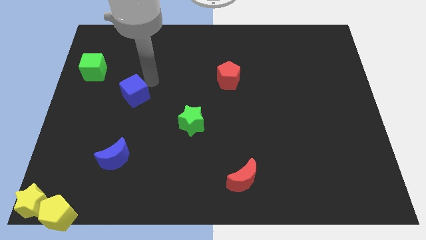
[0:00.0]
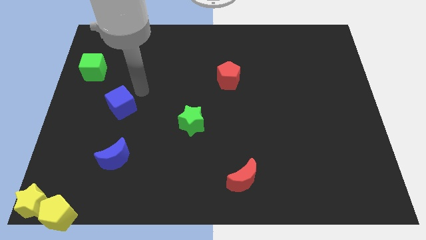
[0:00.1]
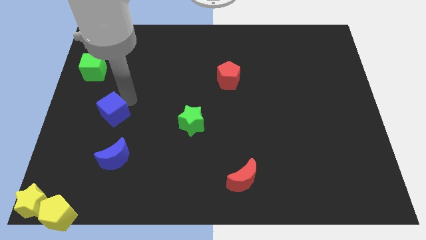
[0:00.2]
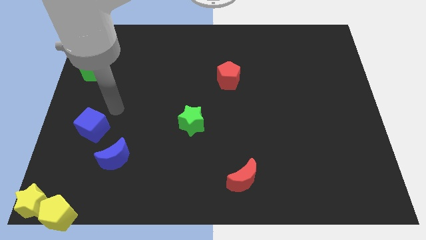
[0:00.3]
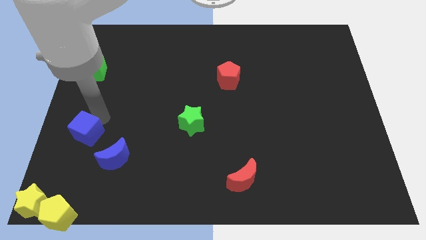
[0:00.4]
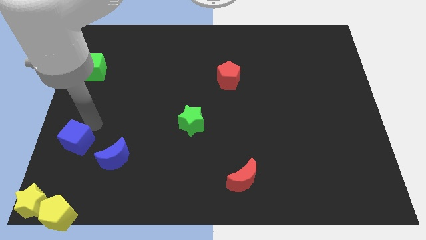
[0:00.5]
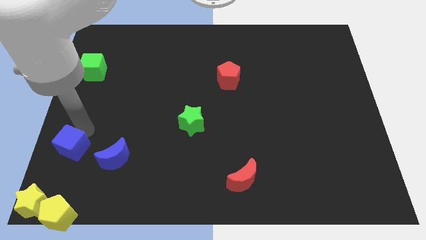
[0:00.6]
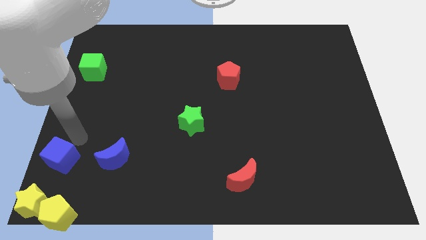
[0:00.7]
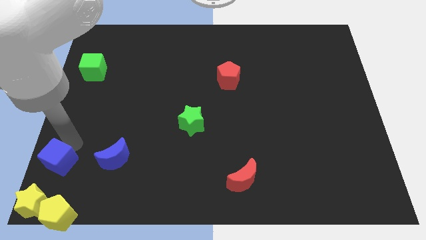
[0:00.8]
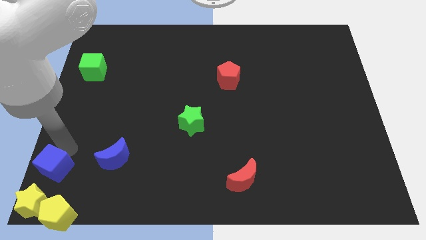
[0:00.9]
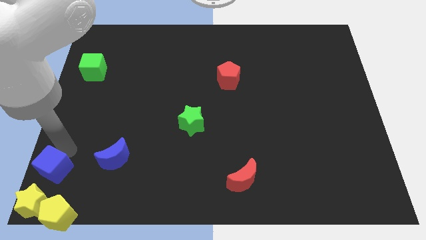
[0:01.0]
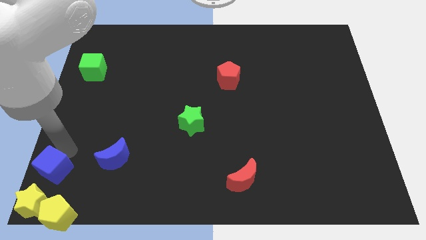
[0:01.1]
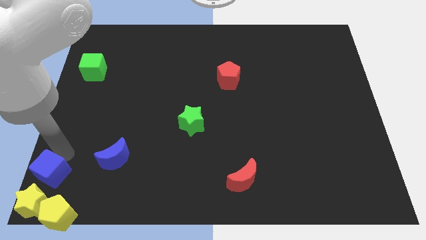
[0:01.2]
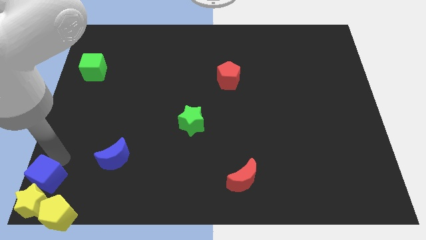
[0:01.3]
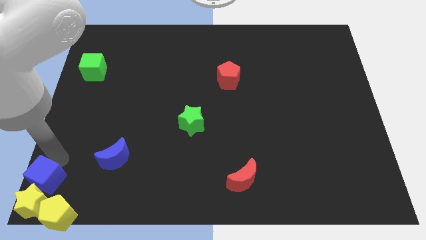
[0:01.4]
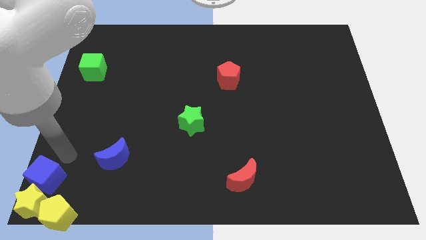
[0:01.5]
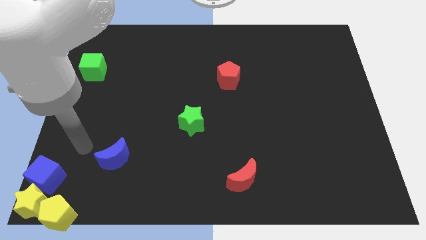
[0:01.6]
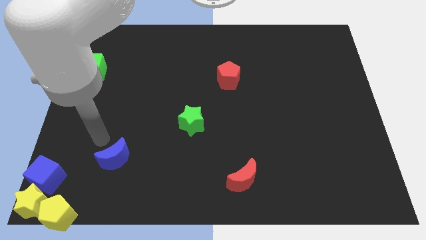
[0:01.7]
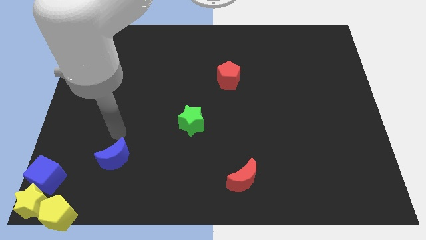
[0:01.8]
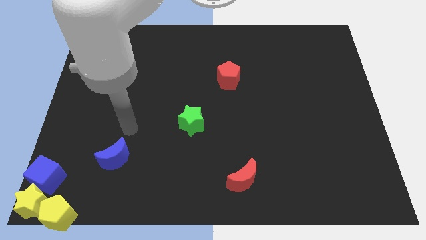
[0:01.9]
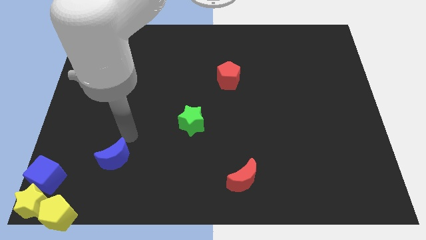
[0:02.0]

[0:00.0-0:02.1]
push blue cube into yellow star

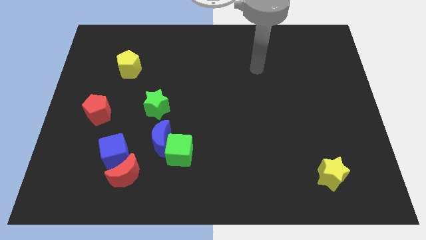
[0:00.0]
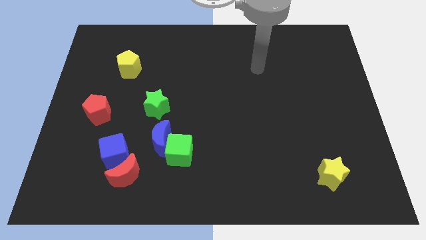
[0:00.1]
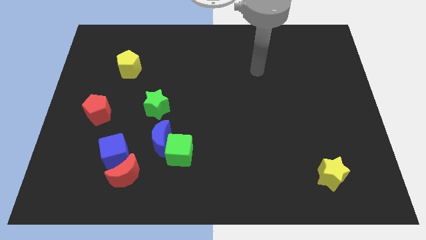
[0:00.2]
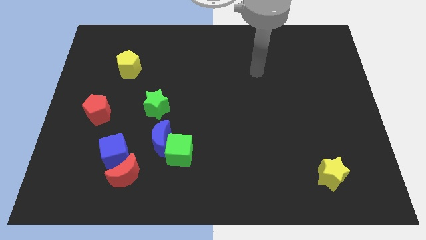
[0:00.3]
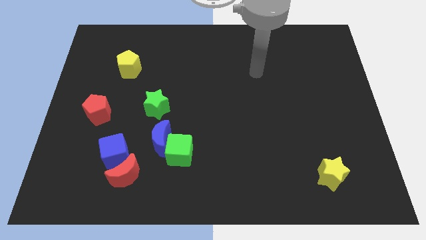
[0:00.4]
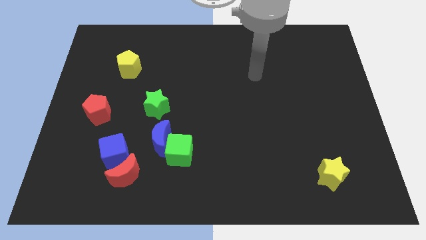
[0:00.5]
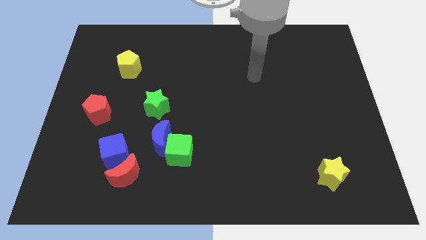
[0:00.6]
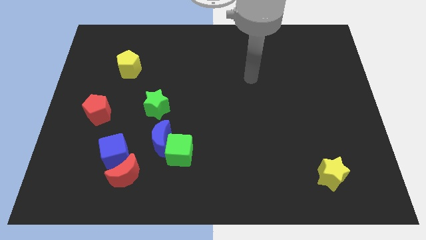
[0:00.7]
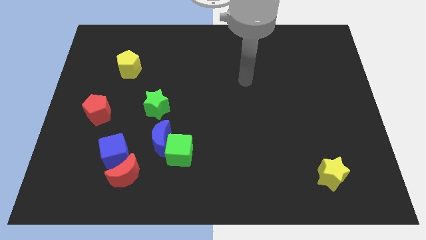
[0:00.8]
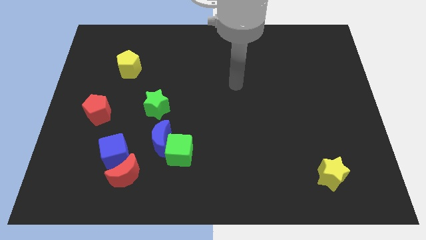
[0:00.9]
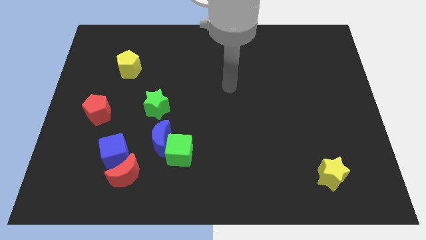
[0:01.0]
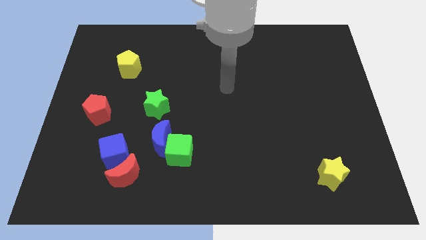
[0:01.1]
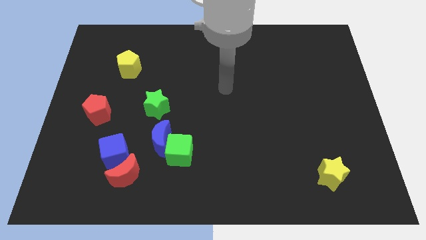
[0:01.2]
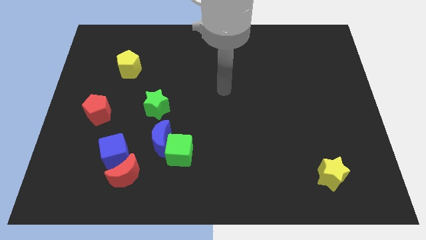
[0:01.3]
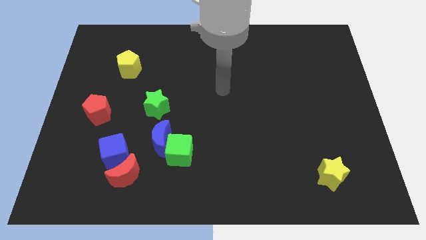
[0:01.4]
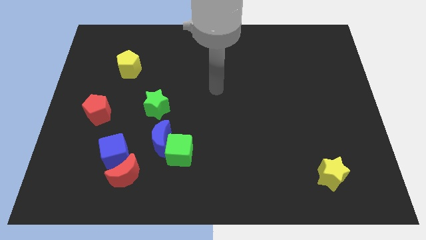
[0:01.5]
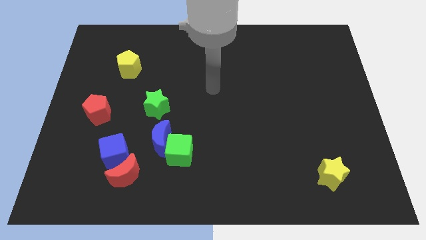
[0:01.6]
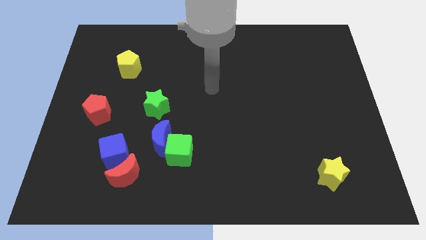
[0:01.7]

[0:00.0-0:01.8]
move the diagonally to the green star

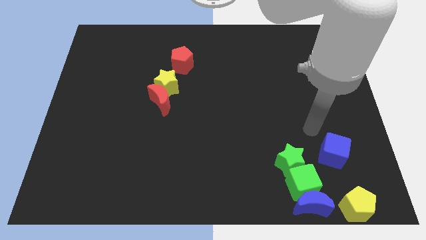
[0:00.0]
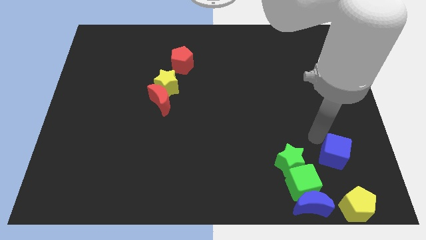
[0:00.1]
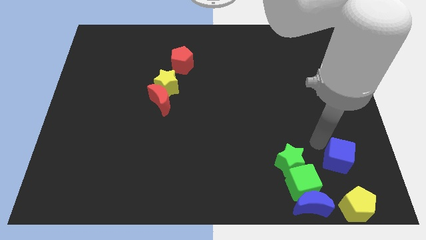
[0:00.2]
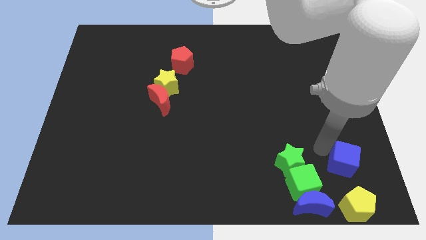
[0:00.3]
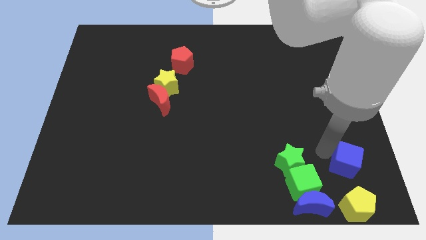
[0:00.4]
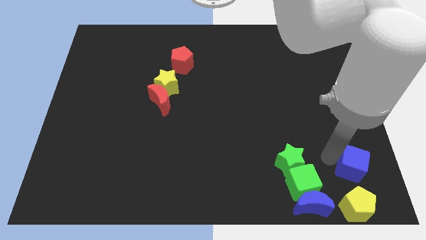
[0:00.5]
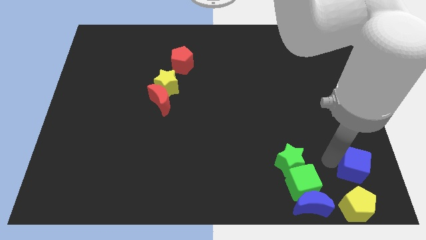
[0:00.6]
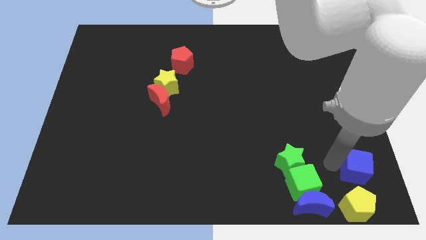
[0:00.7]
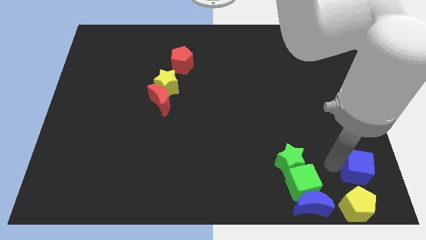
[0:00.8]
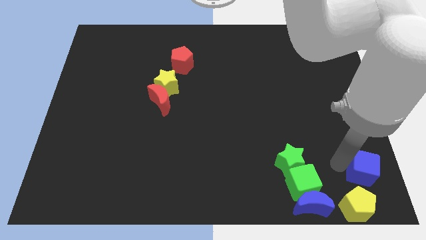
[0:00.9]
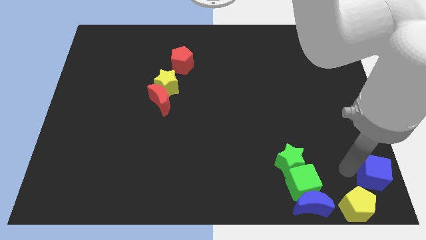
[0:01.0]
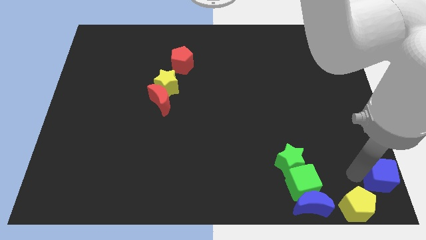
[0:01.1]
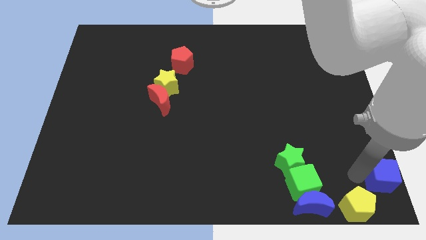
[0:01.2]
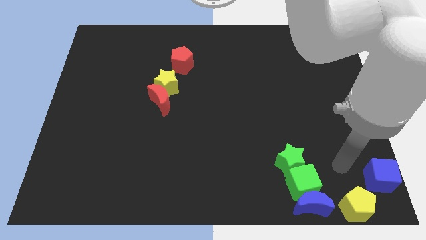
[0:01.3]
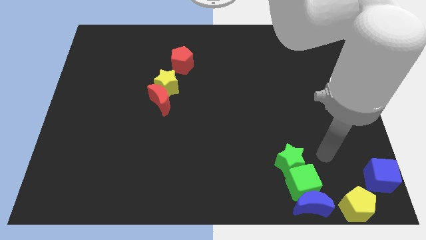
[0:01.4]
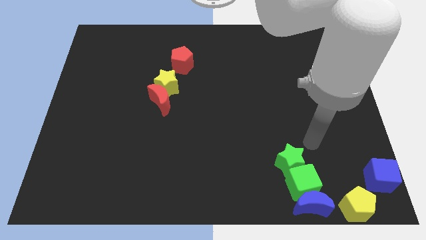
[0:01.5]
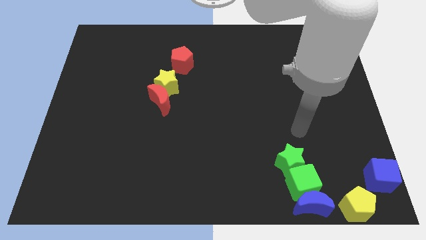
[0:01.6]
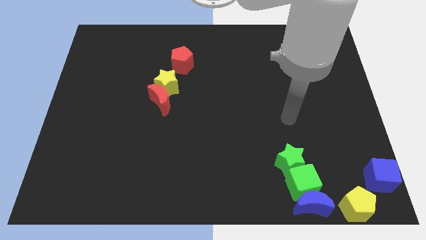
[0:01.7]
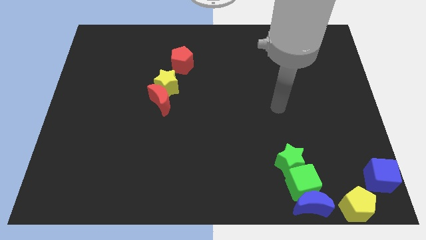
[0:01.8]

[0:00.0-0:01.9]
put the blue cube diagonally top right to the yellow pentagon

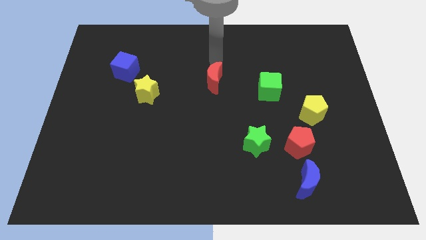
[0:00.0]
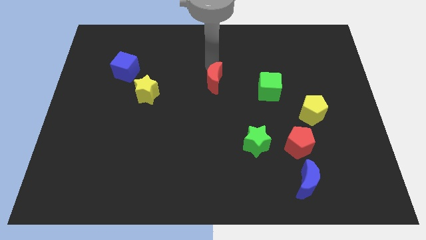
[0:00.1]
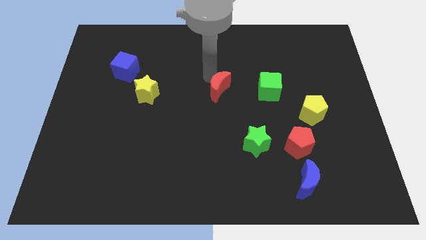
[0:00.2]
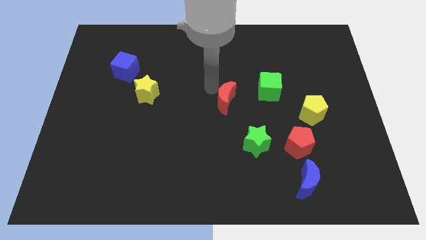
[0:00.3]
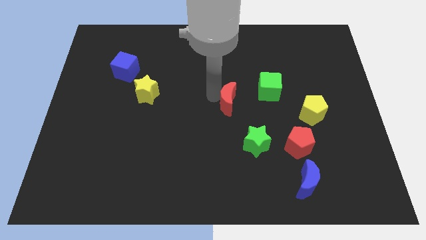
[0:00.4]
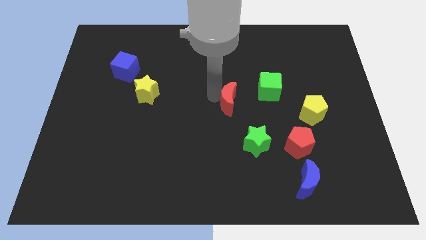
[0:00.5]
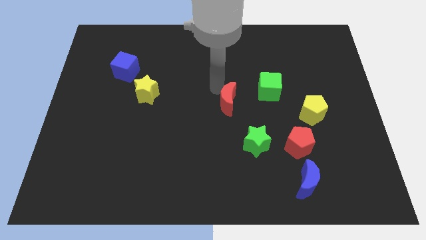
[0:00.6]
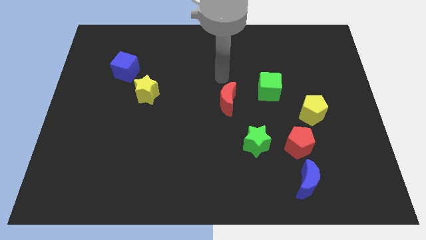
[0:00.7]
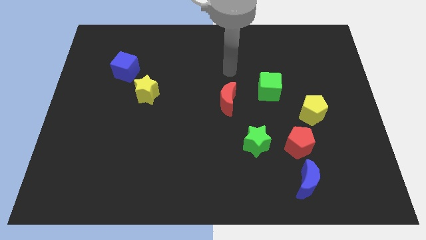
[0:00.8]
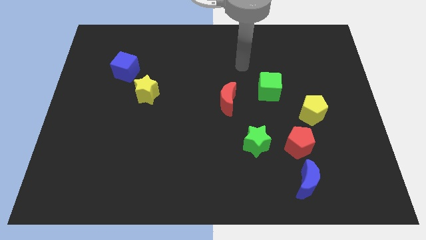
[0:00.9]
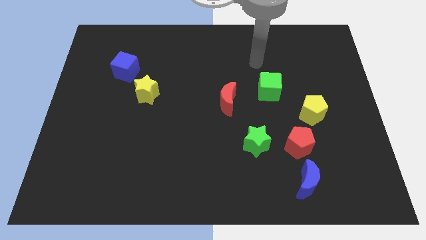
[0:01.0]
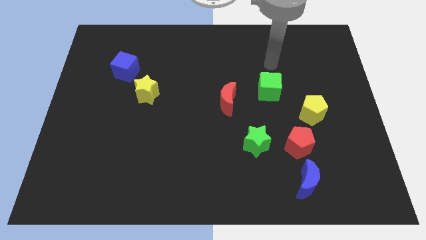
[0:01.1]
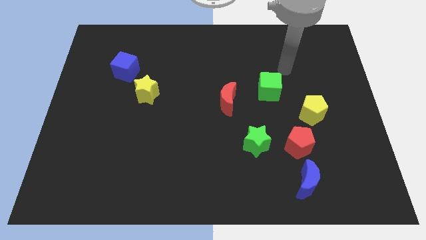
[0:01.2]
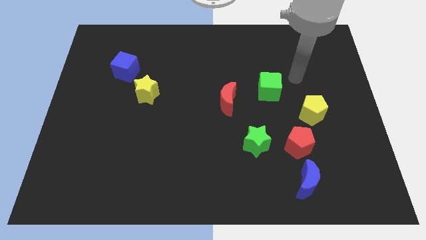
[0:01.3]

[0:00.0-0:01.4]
place red moon to the bottom left of the green cube

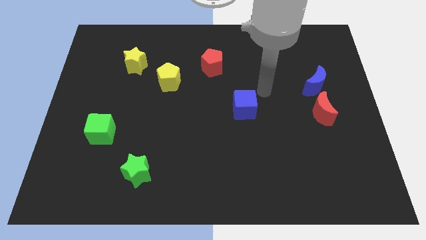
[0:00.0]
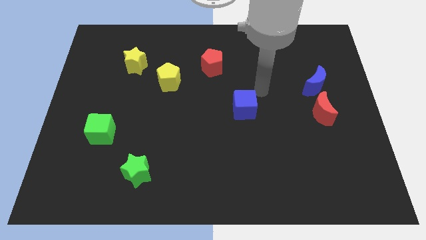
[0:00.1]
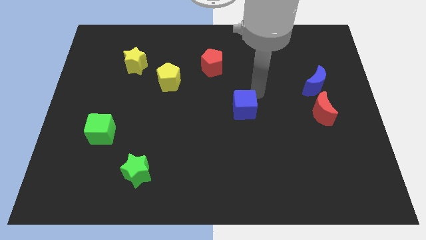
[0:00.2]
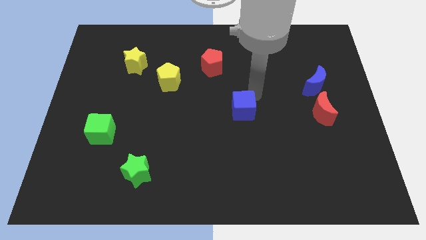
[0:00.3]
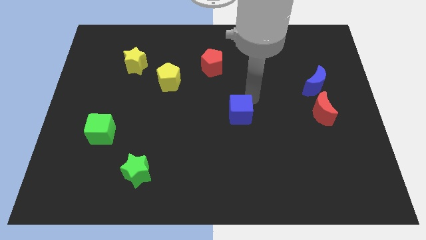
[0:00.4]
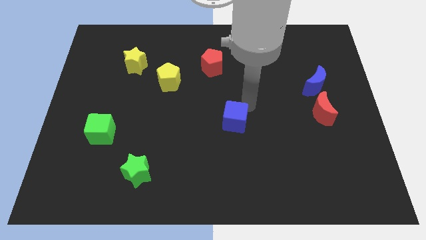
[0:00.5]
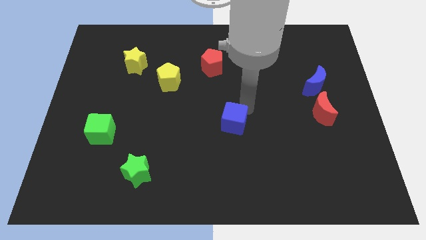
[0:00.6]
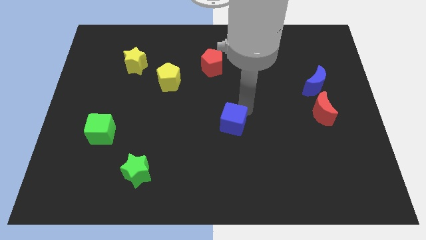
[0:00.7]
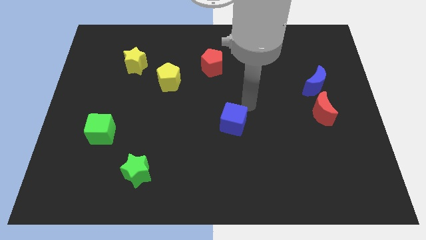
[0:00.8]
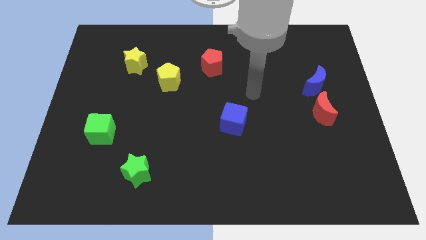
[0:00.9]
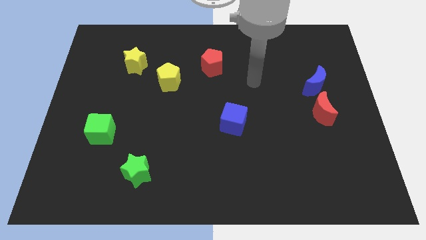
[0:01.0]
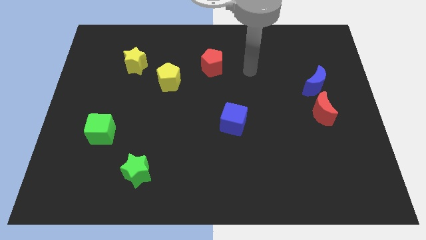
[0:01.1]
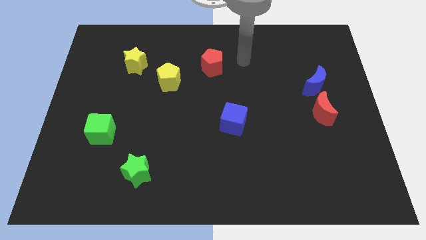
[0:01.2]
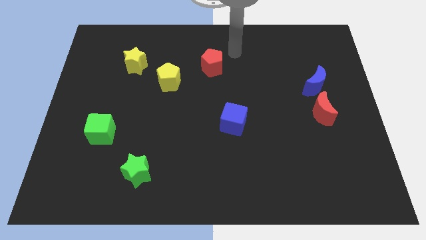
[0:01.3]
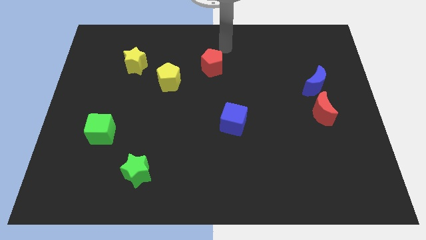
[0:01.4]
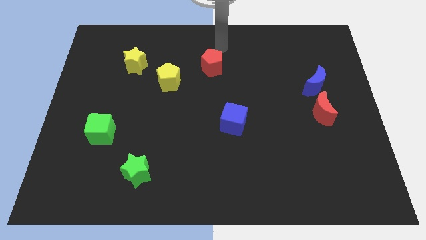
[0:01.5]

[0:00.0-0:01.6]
push the blue cube towards the center of the board
